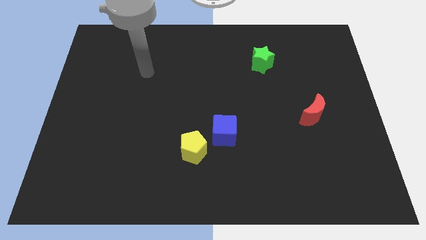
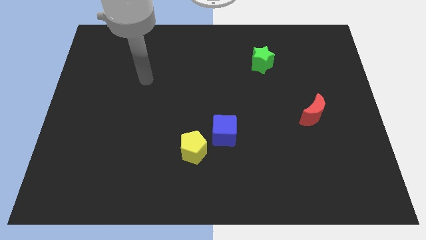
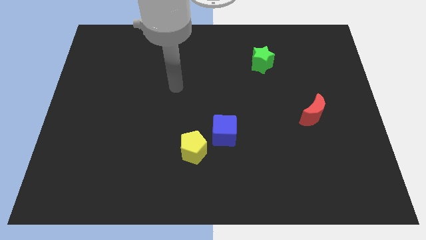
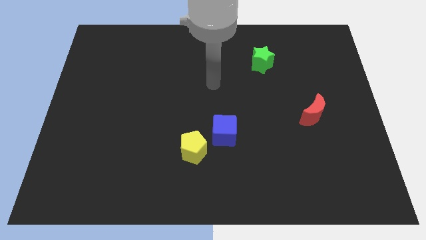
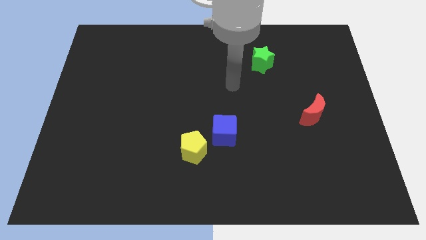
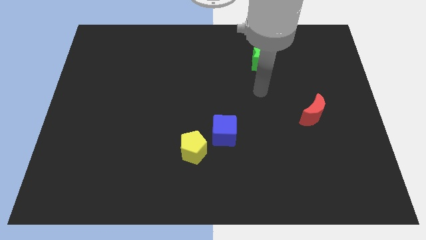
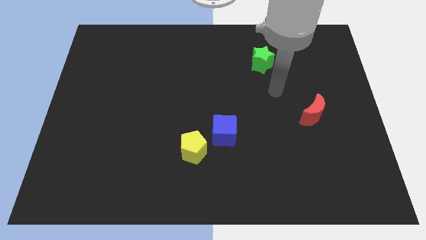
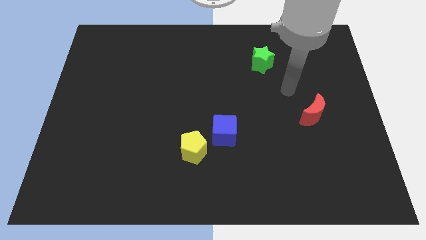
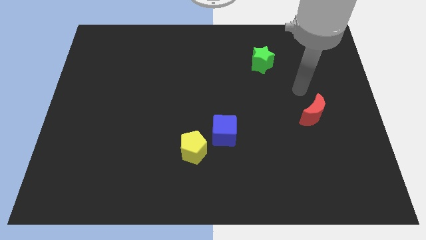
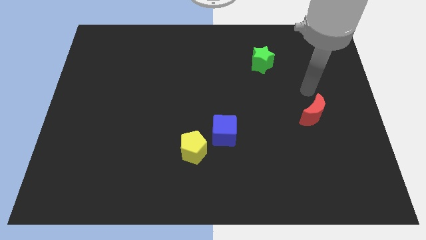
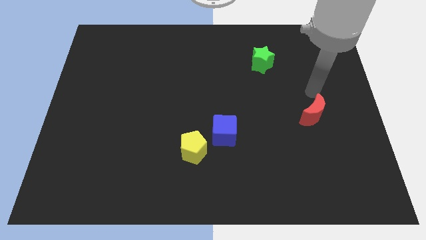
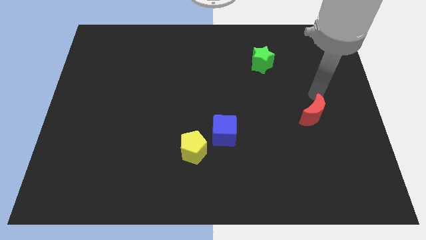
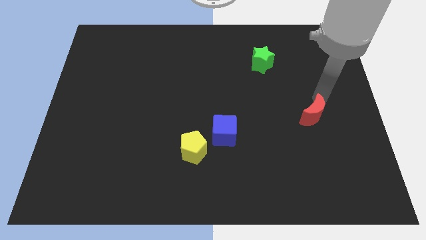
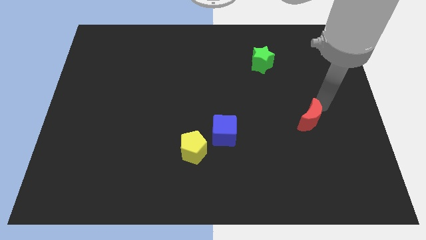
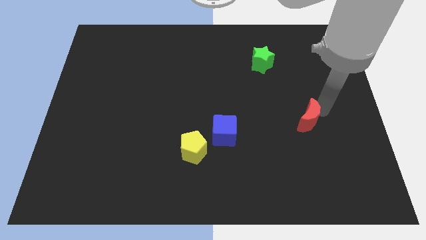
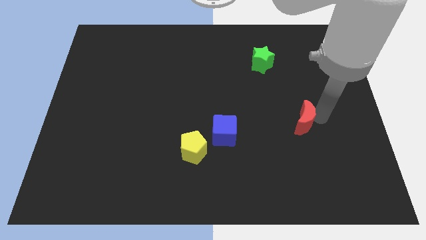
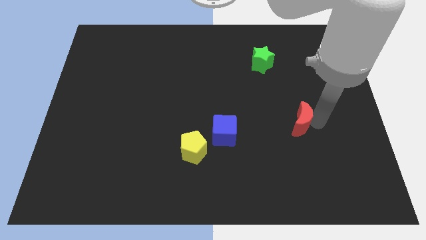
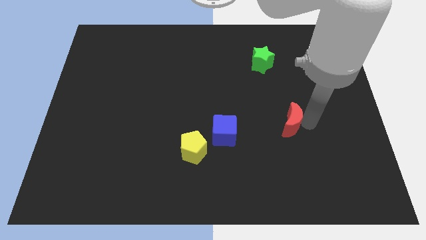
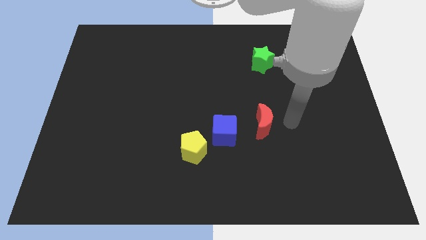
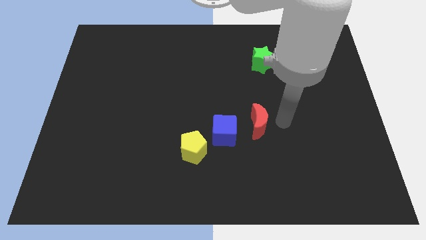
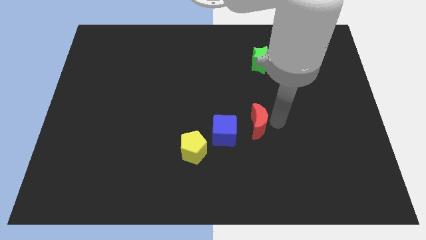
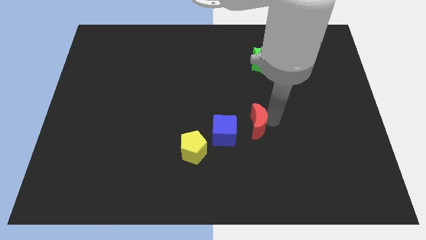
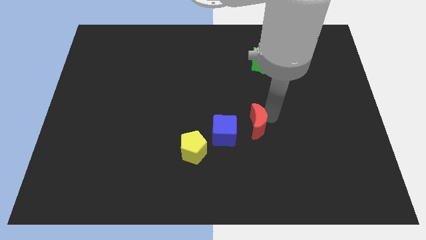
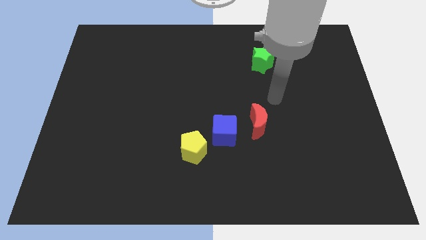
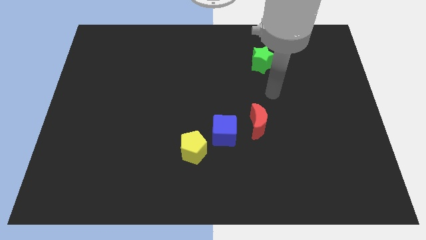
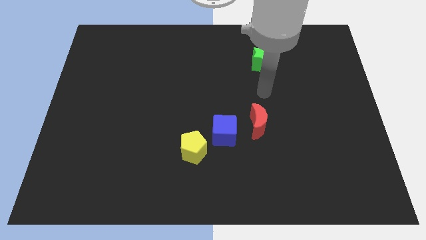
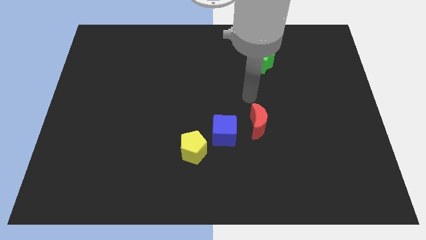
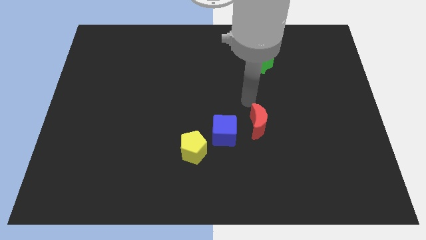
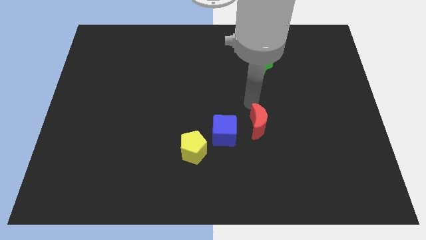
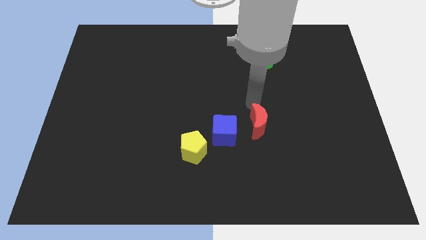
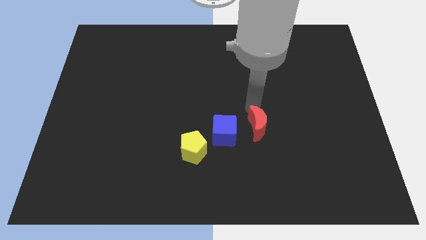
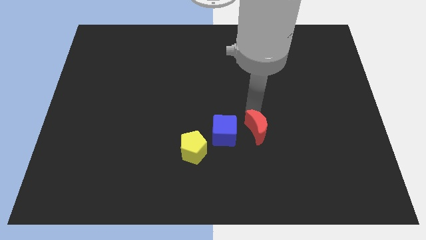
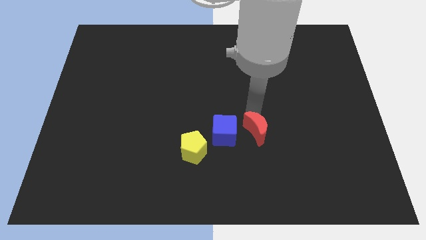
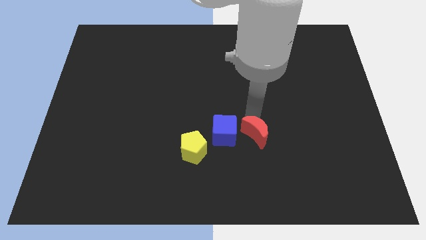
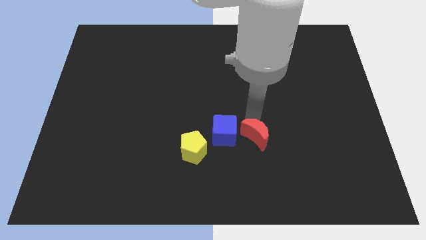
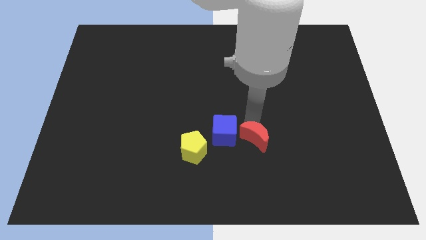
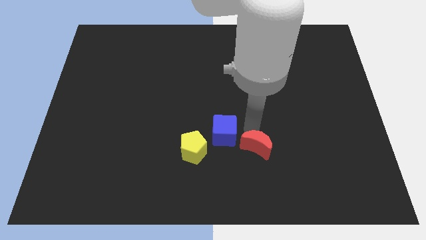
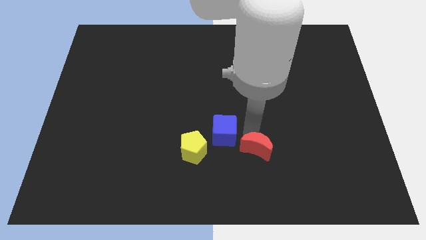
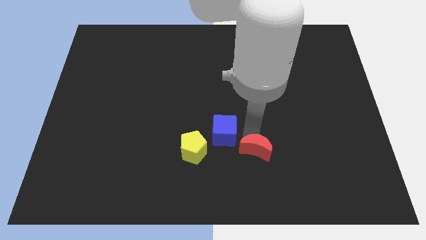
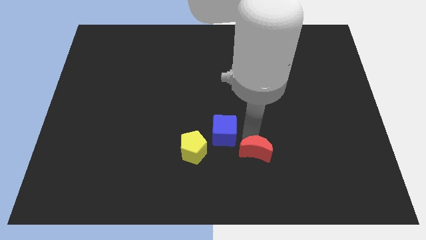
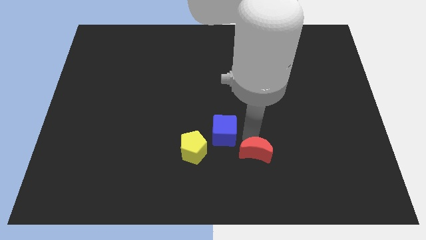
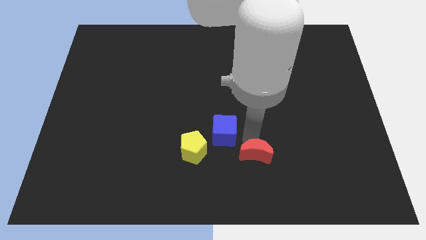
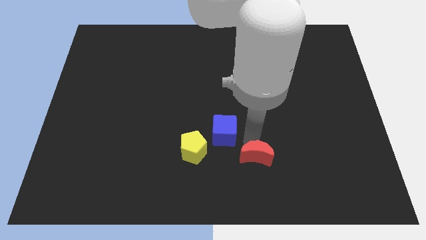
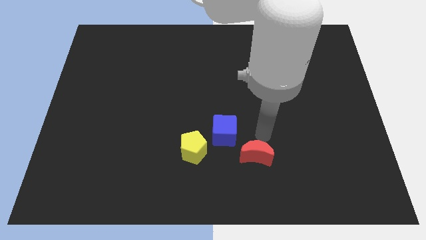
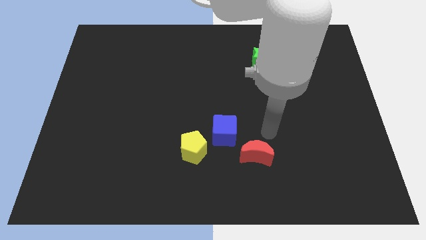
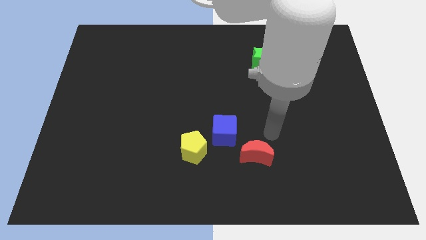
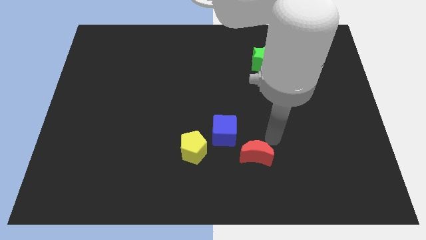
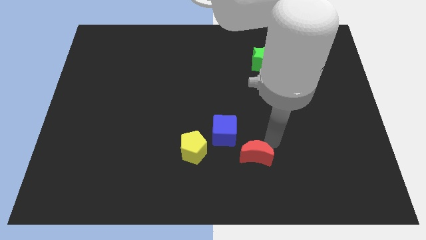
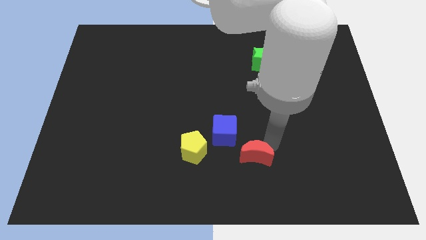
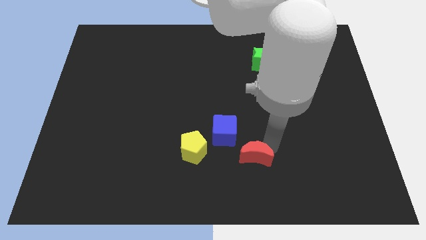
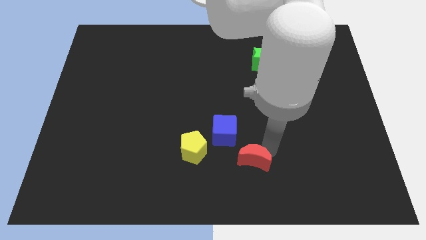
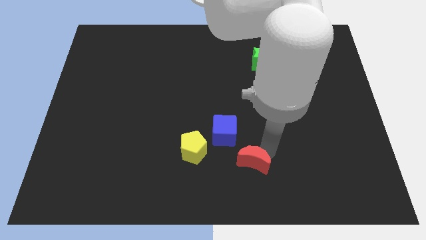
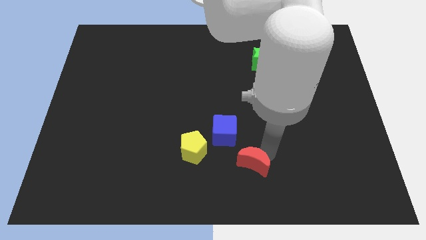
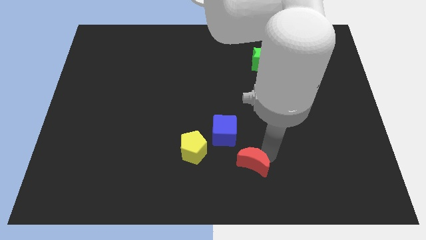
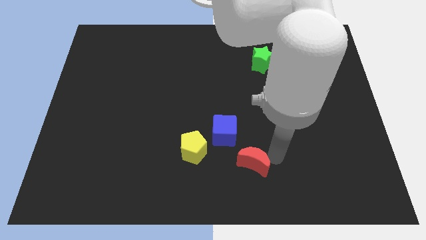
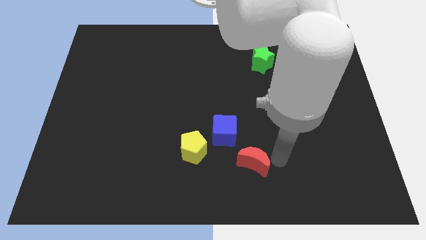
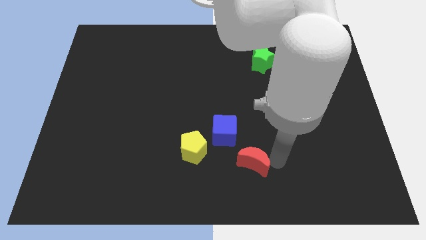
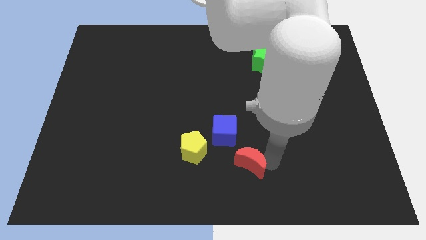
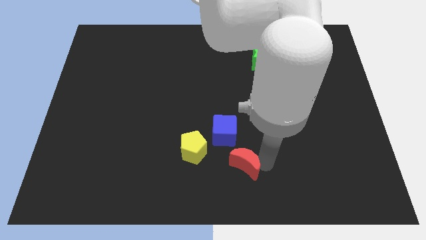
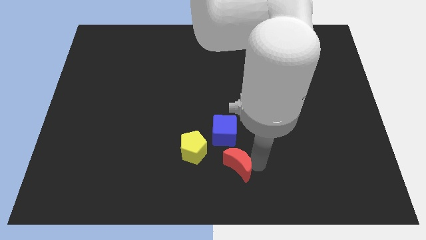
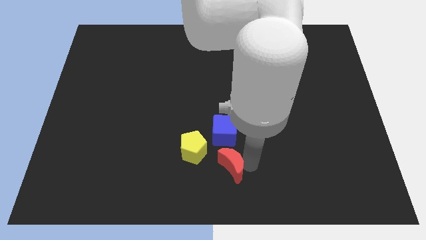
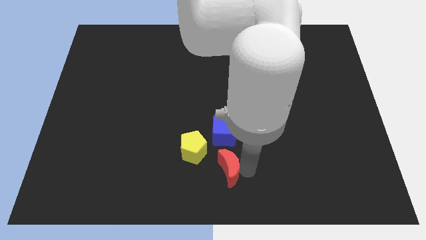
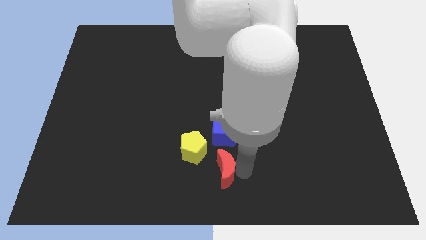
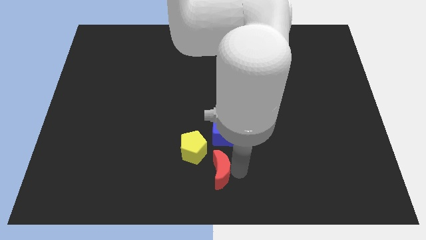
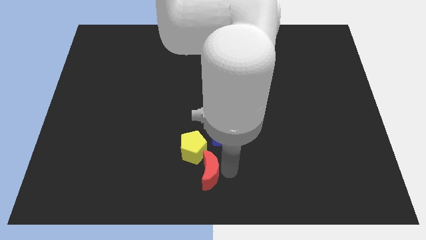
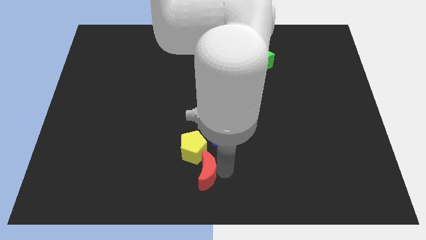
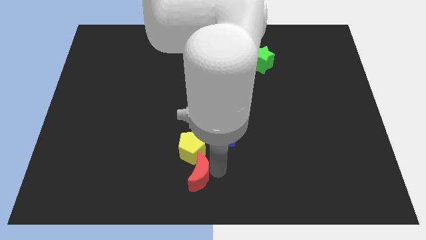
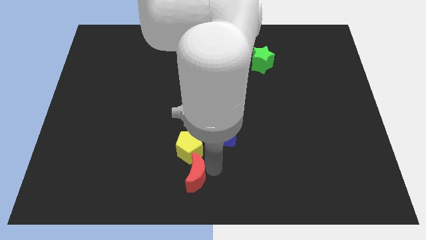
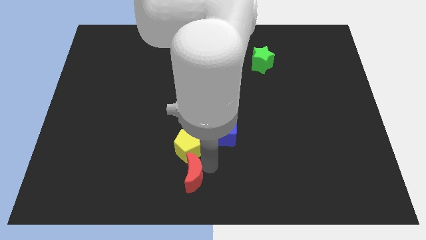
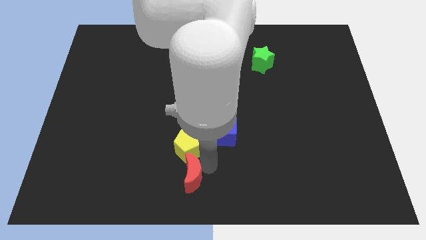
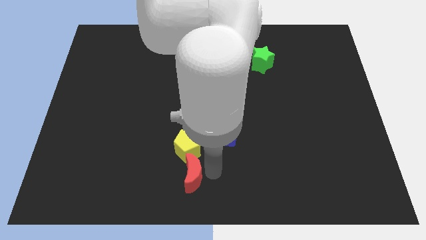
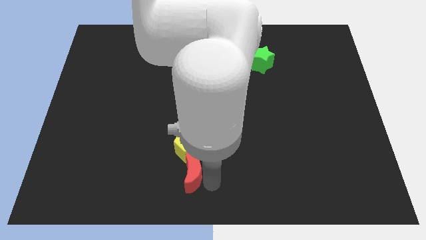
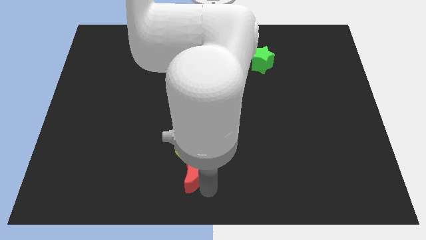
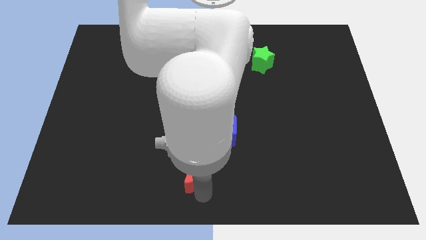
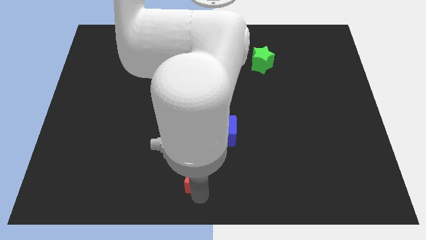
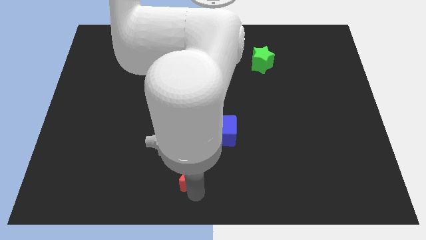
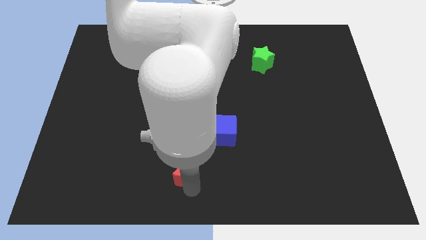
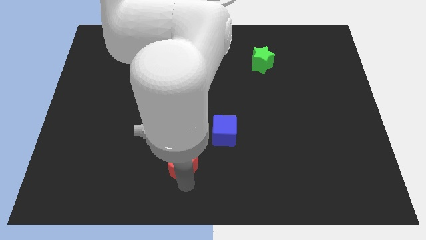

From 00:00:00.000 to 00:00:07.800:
move the red block towards the yellow pentagon

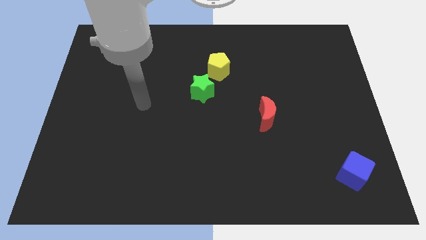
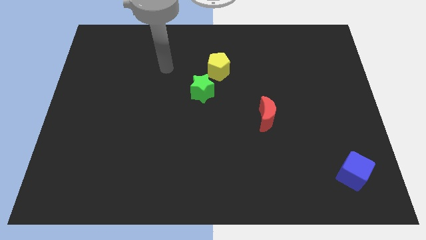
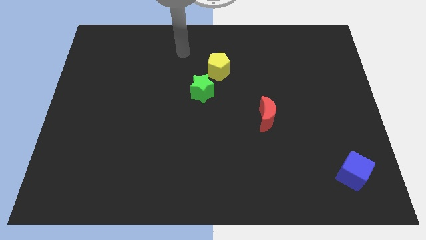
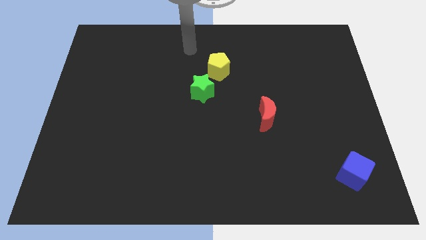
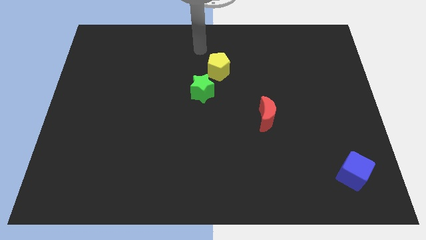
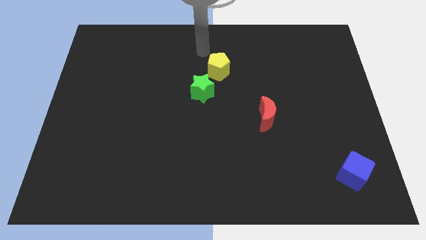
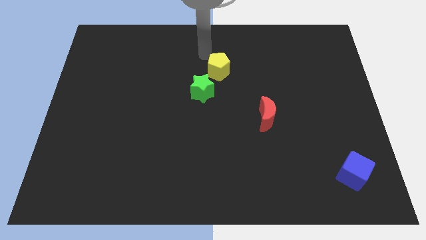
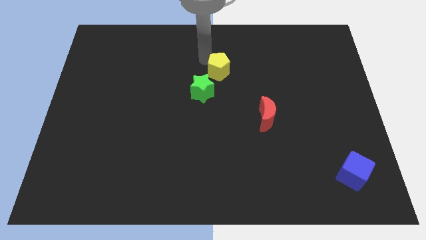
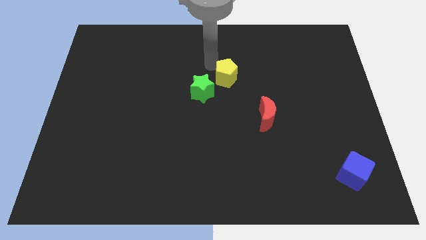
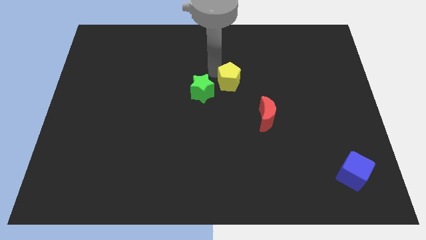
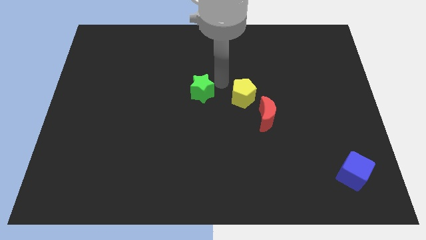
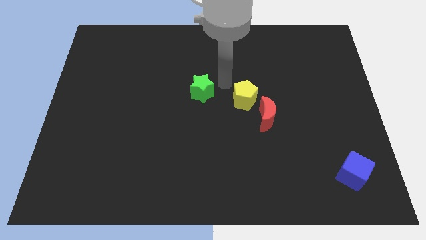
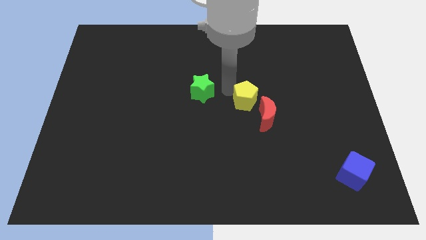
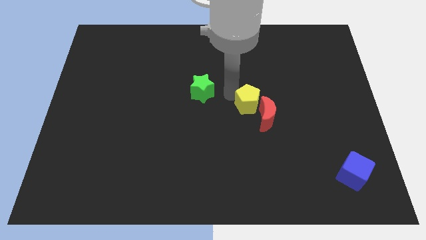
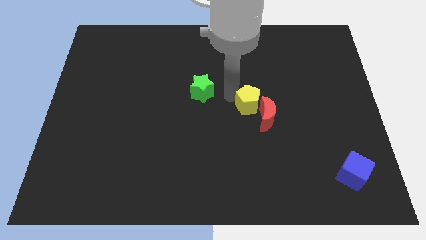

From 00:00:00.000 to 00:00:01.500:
push the yellow block close to the moon
